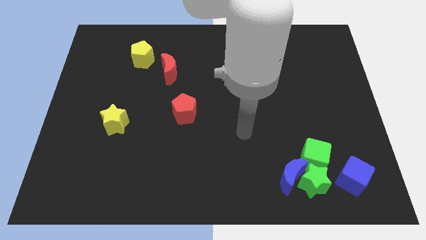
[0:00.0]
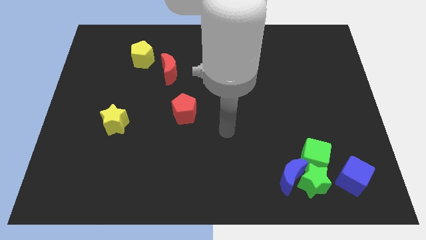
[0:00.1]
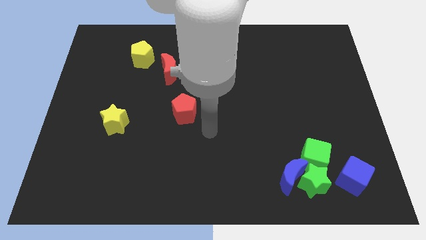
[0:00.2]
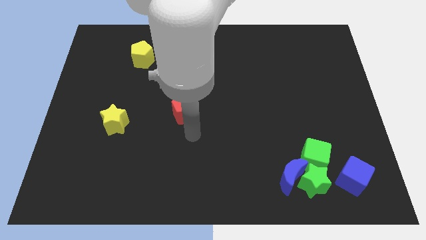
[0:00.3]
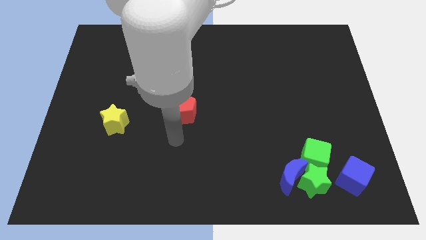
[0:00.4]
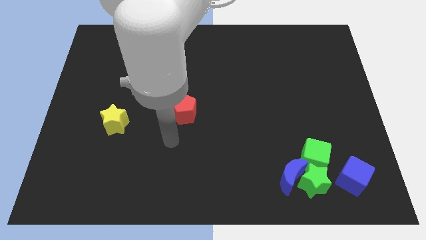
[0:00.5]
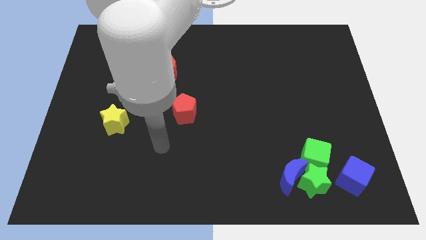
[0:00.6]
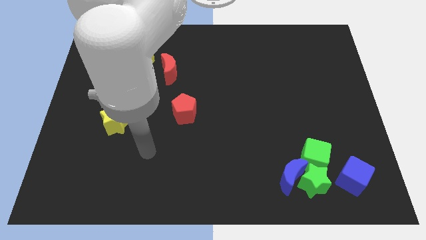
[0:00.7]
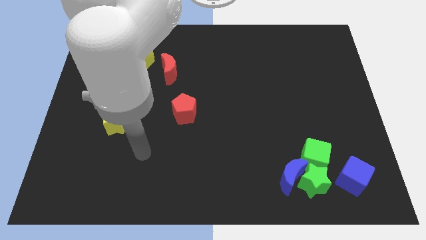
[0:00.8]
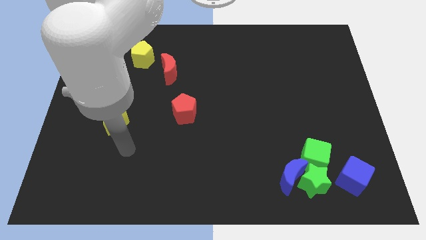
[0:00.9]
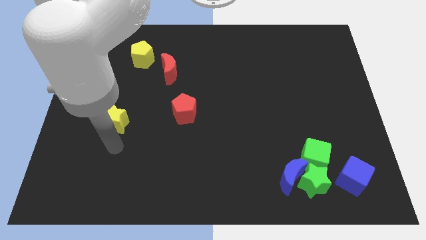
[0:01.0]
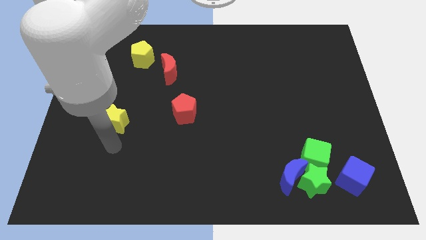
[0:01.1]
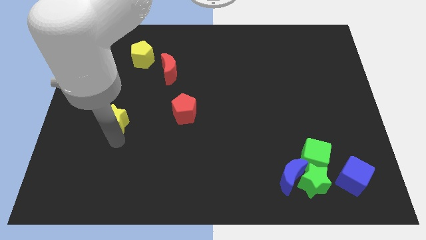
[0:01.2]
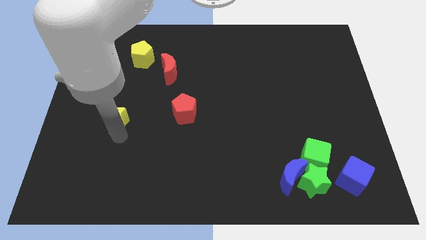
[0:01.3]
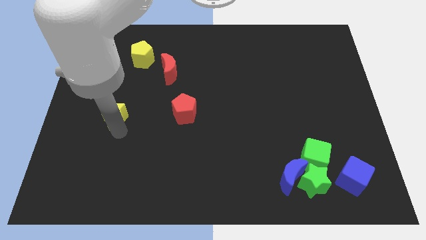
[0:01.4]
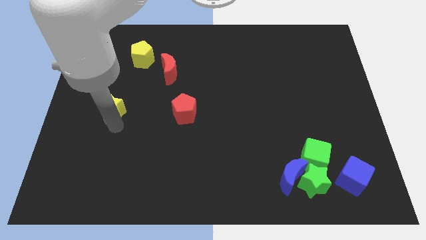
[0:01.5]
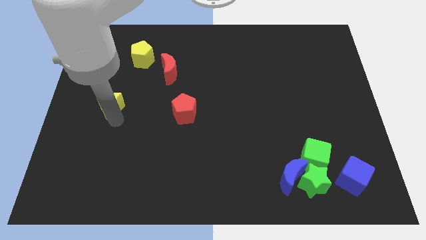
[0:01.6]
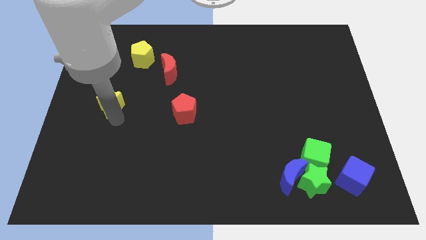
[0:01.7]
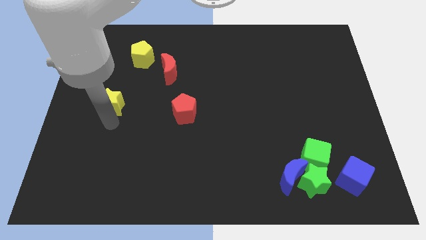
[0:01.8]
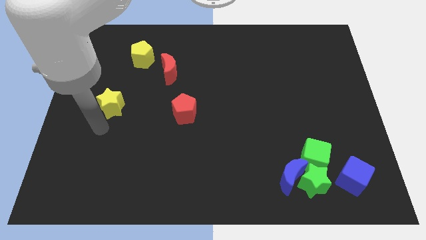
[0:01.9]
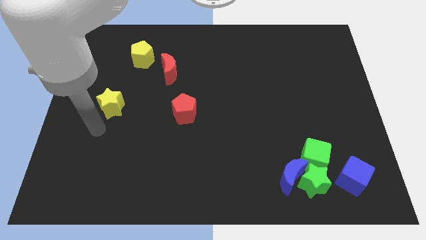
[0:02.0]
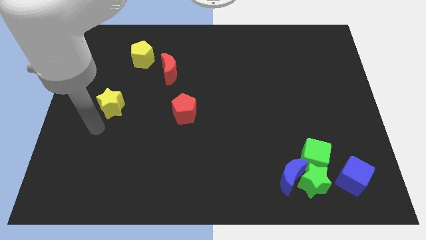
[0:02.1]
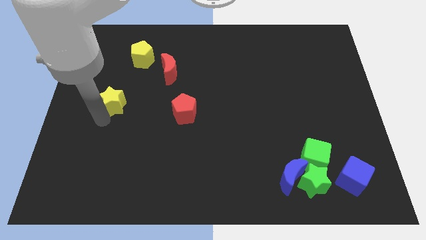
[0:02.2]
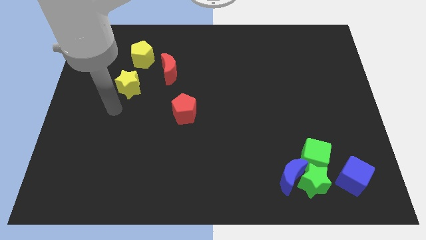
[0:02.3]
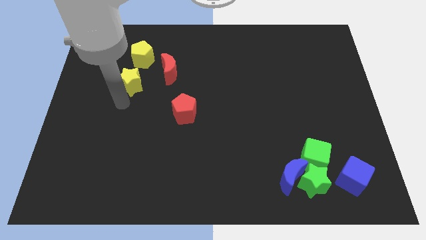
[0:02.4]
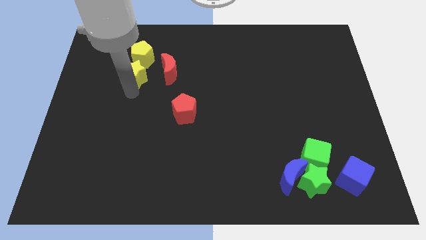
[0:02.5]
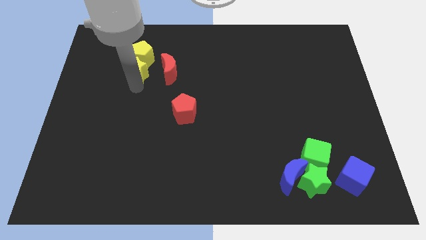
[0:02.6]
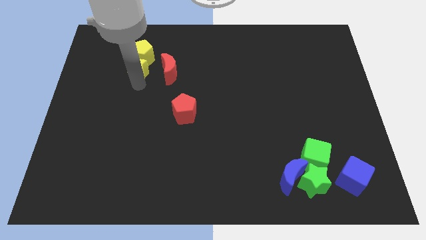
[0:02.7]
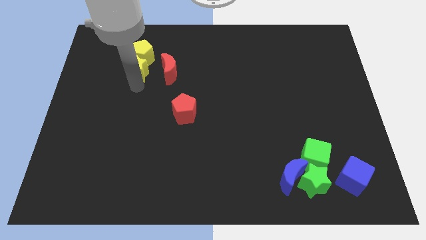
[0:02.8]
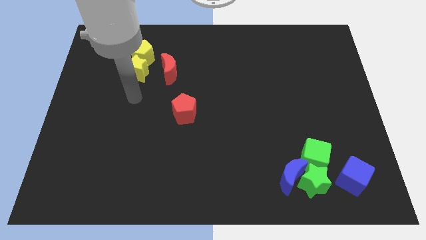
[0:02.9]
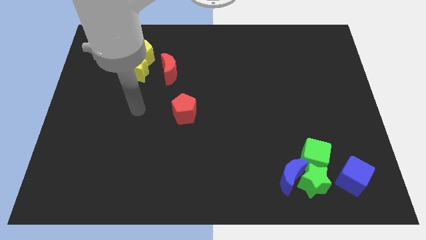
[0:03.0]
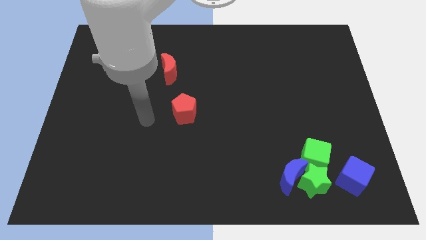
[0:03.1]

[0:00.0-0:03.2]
move the yellow star into the yellow pentagon

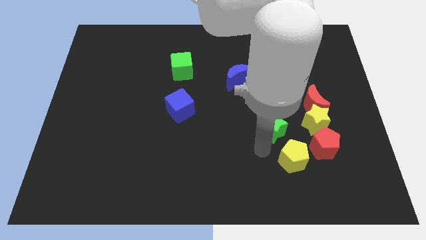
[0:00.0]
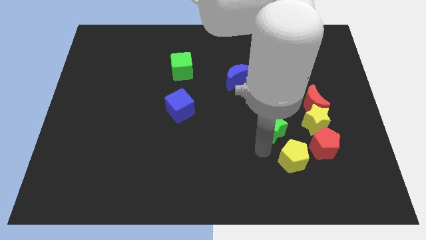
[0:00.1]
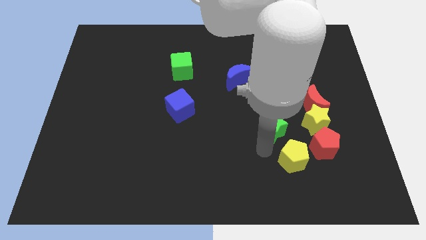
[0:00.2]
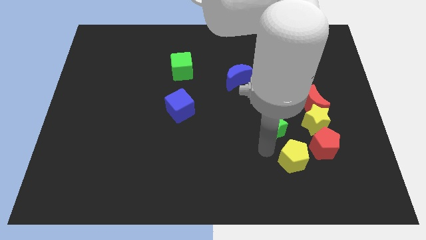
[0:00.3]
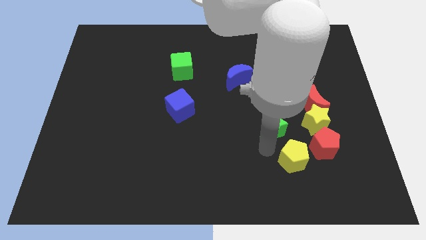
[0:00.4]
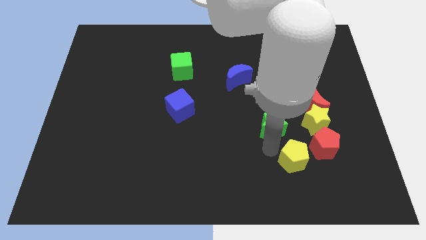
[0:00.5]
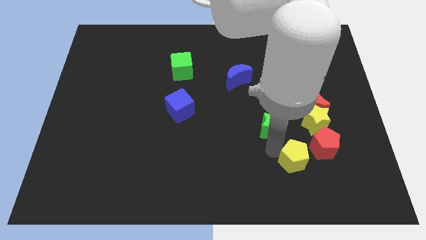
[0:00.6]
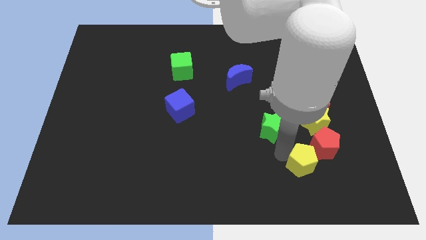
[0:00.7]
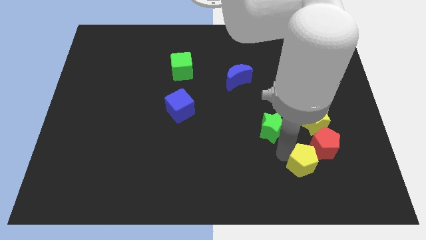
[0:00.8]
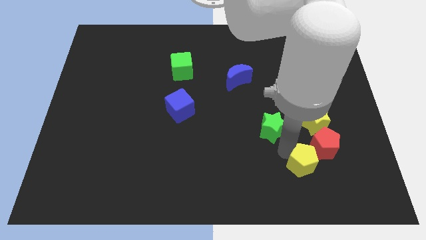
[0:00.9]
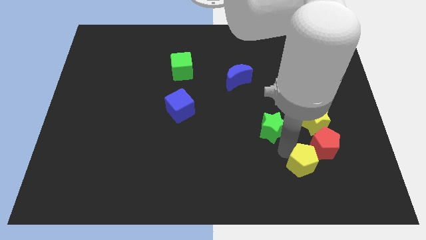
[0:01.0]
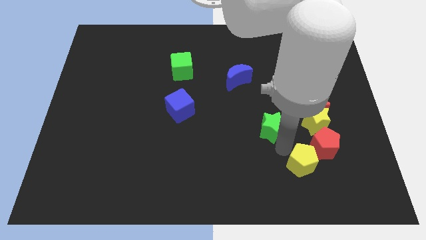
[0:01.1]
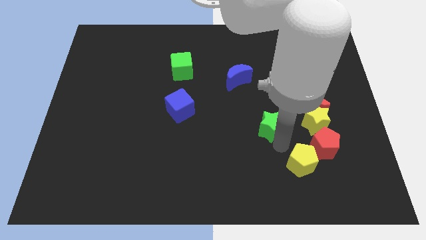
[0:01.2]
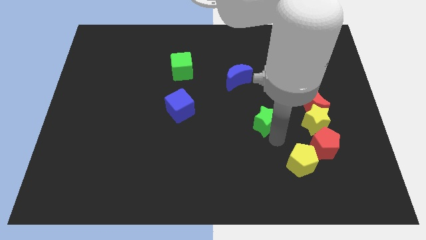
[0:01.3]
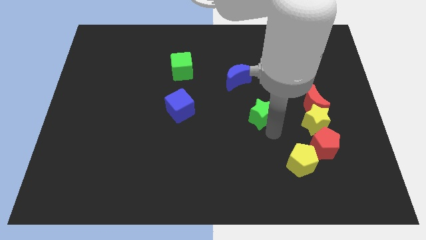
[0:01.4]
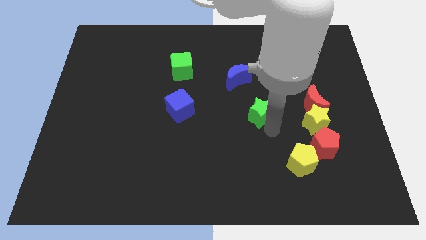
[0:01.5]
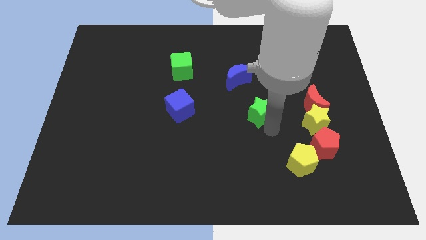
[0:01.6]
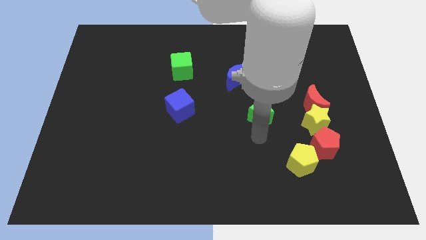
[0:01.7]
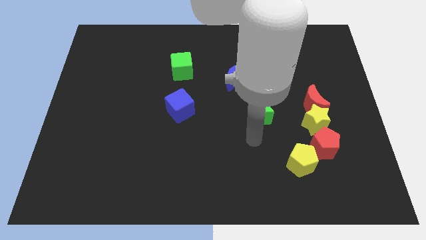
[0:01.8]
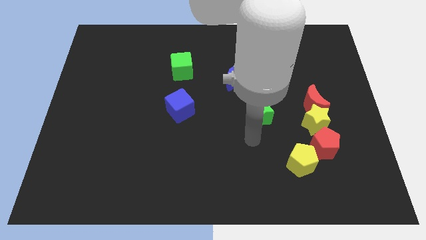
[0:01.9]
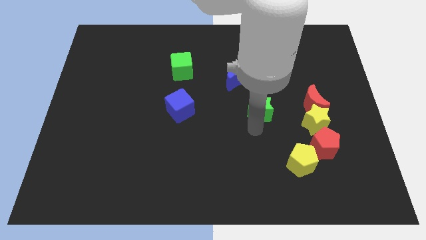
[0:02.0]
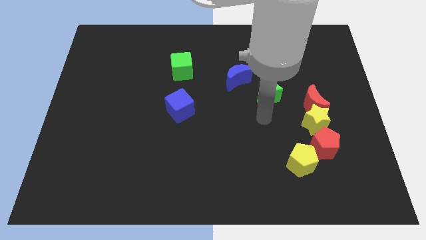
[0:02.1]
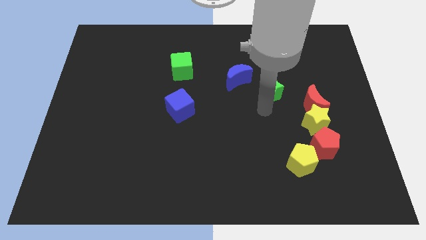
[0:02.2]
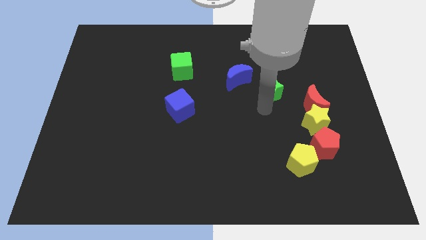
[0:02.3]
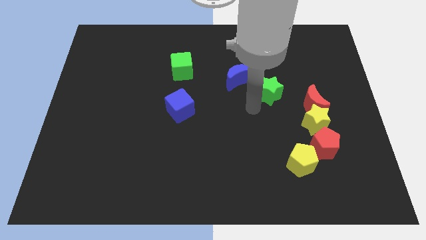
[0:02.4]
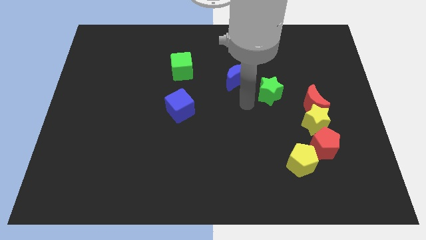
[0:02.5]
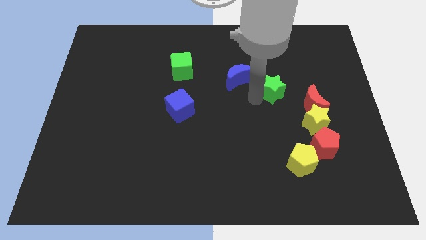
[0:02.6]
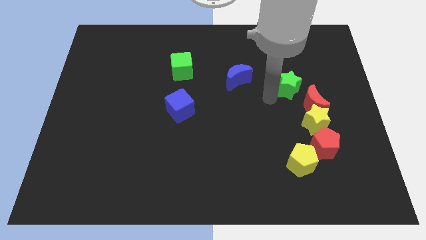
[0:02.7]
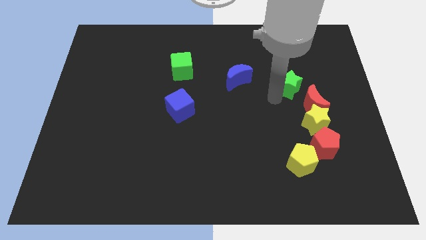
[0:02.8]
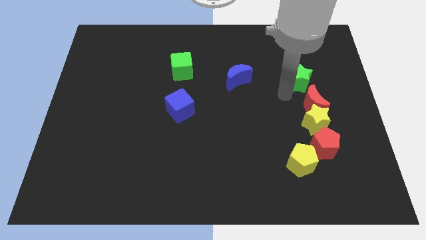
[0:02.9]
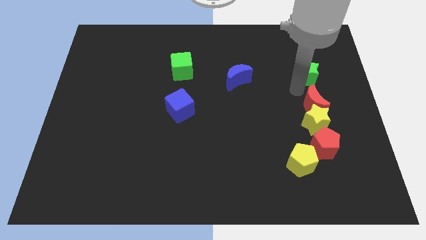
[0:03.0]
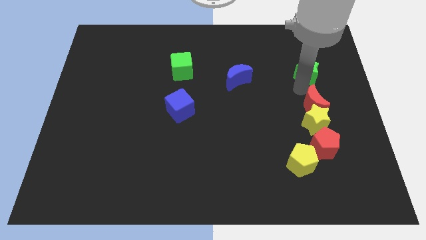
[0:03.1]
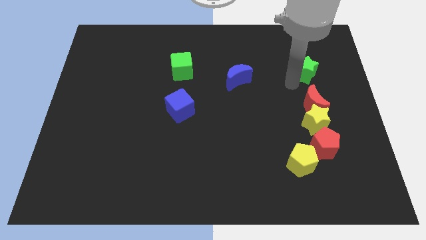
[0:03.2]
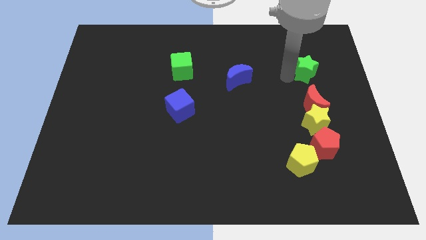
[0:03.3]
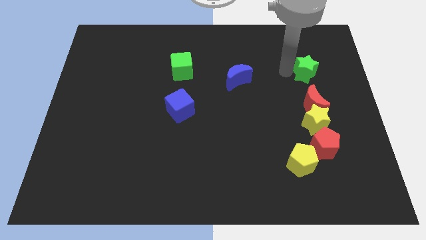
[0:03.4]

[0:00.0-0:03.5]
place green star above red moon

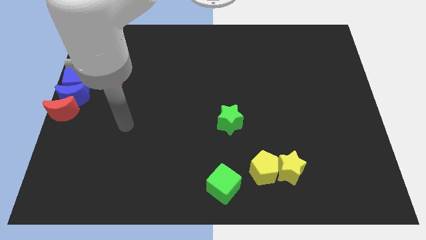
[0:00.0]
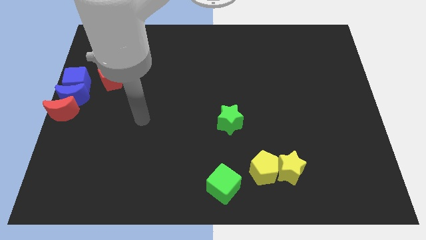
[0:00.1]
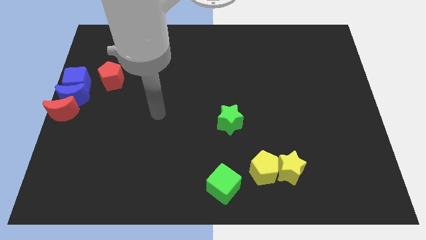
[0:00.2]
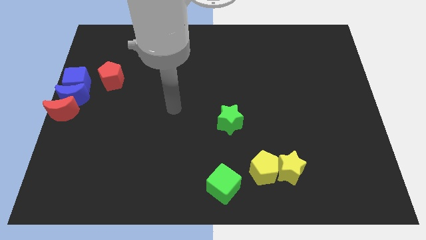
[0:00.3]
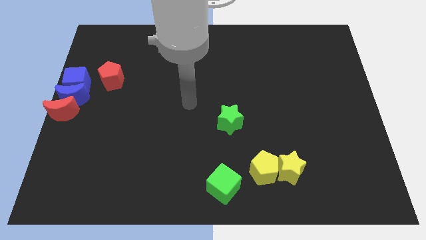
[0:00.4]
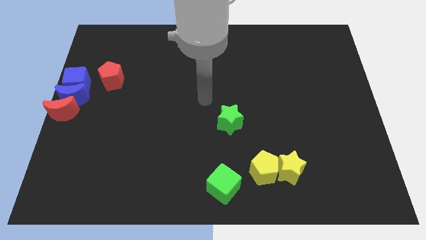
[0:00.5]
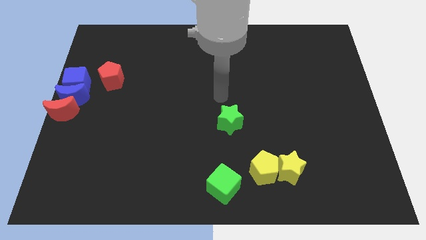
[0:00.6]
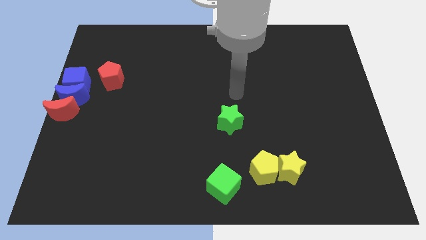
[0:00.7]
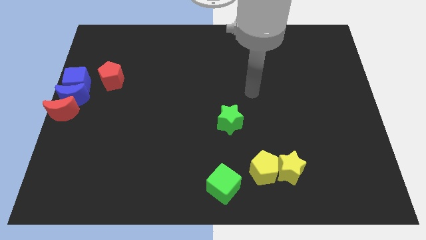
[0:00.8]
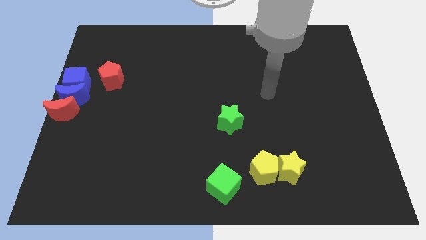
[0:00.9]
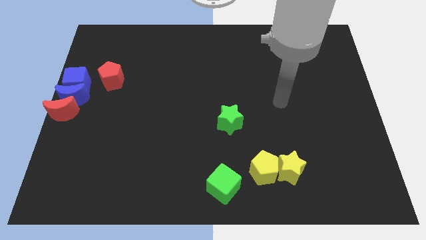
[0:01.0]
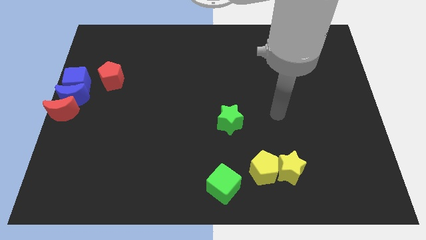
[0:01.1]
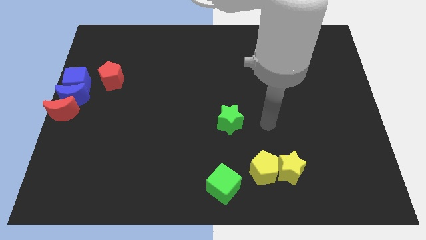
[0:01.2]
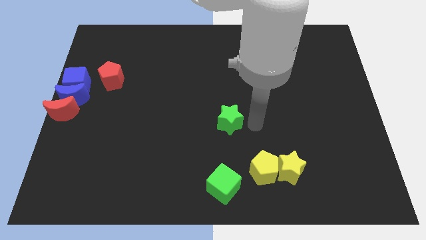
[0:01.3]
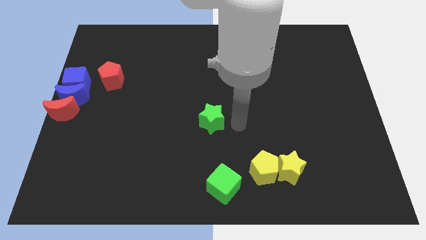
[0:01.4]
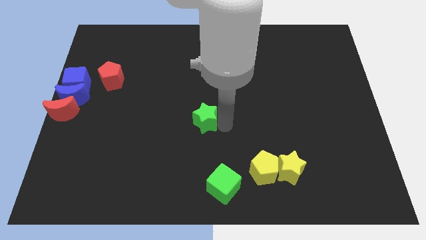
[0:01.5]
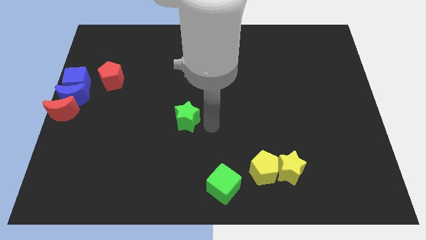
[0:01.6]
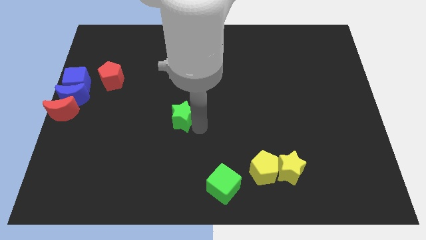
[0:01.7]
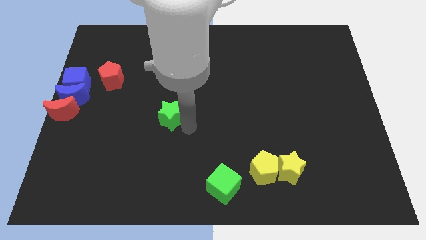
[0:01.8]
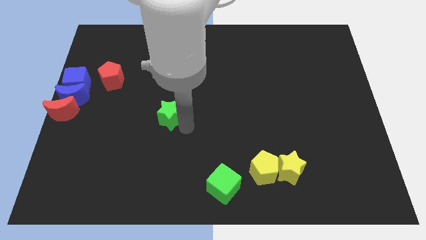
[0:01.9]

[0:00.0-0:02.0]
place the green star in between the yellow pentagon and red pentagon diagonally

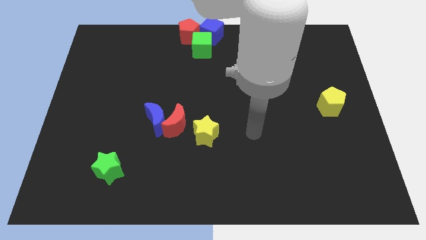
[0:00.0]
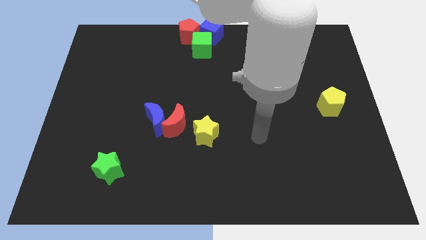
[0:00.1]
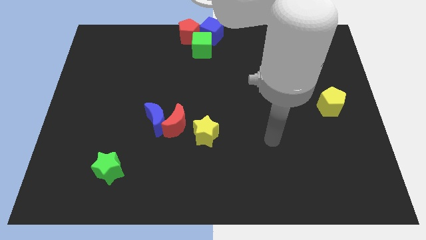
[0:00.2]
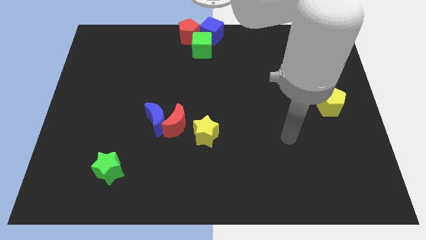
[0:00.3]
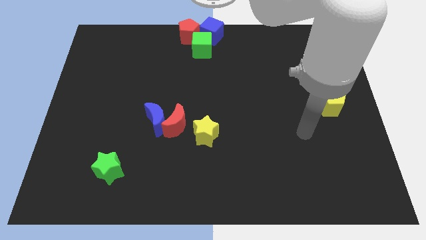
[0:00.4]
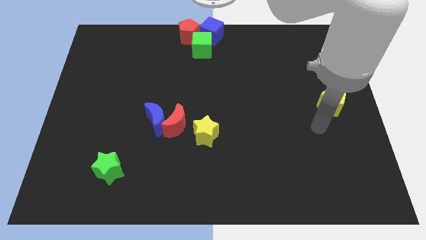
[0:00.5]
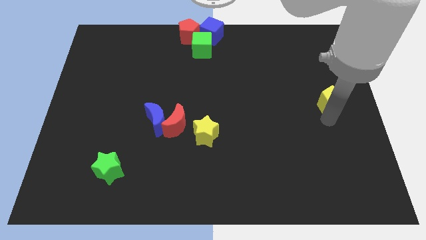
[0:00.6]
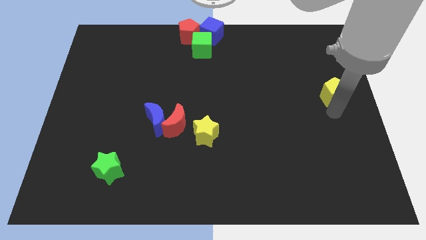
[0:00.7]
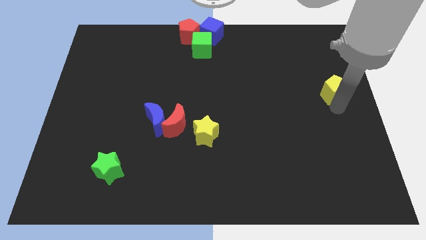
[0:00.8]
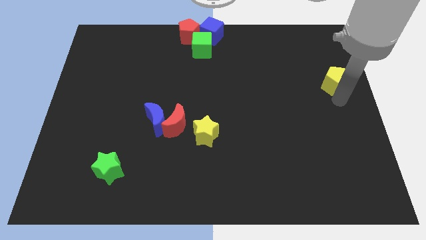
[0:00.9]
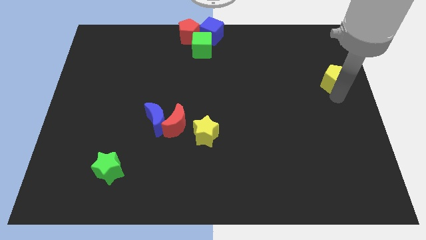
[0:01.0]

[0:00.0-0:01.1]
push the yellow pentagon towards the top right
